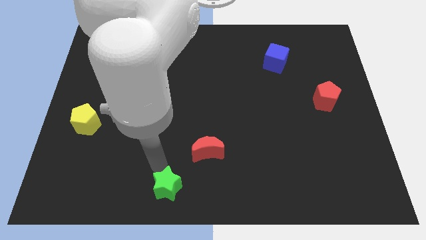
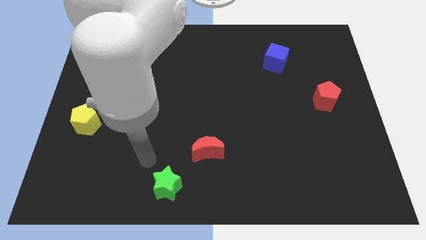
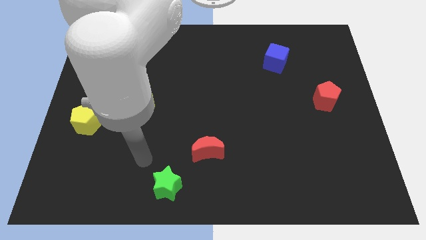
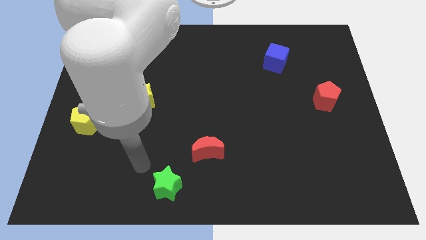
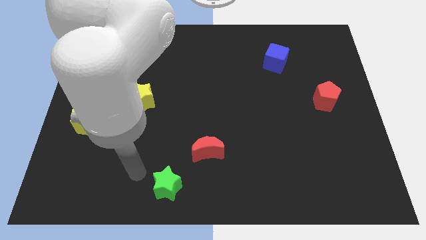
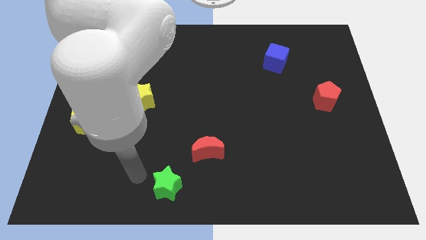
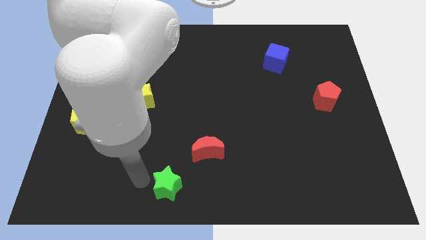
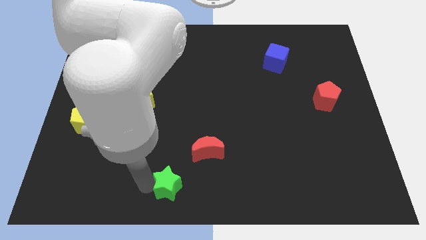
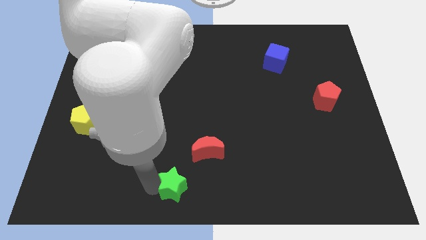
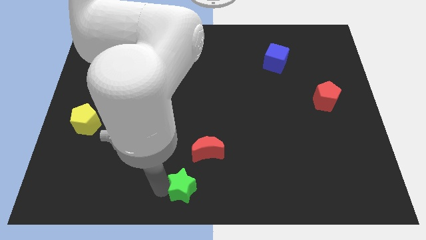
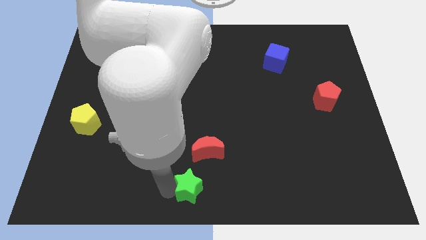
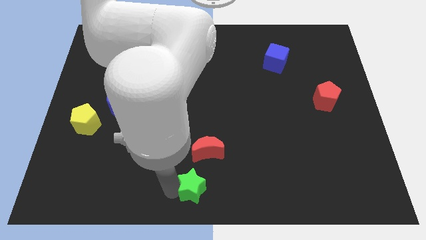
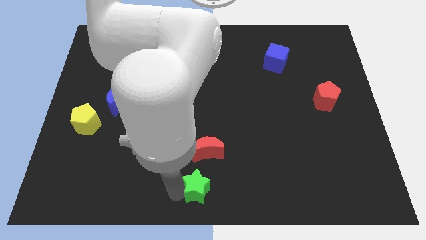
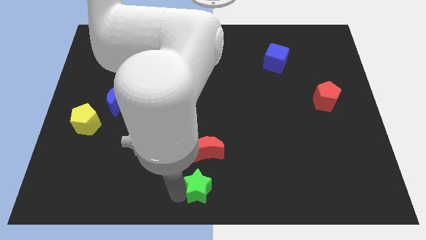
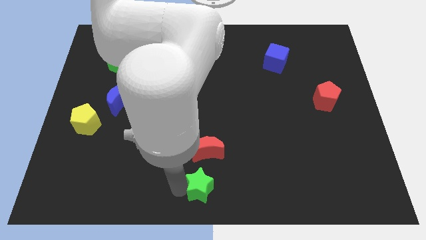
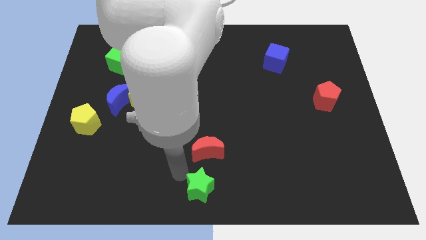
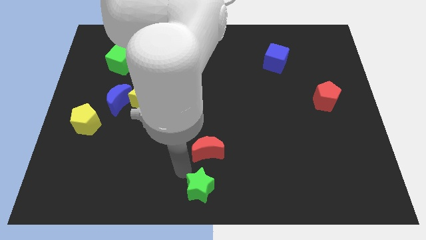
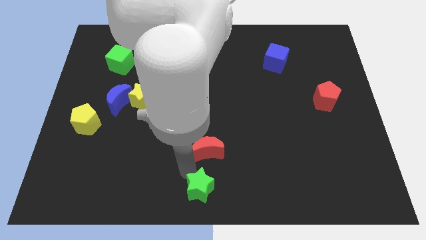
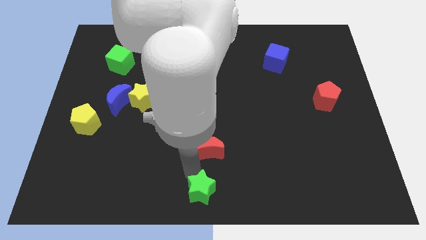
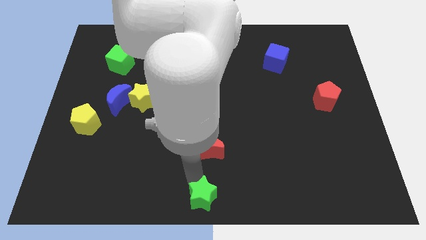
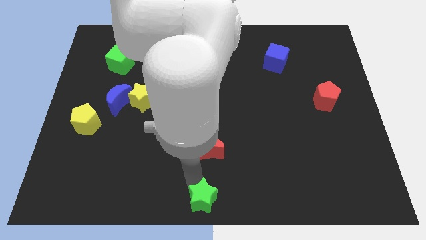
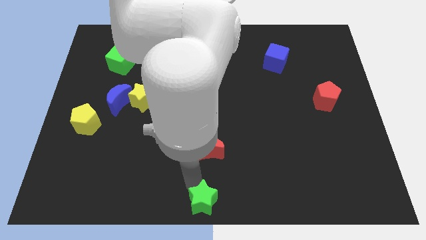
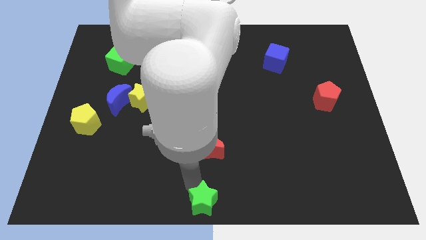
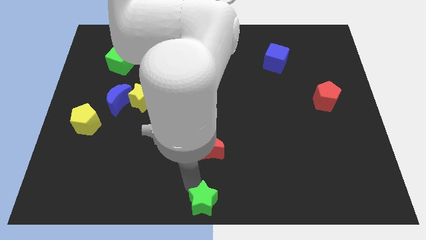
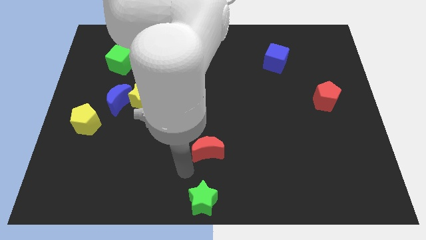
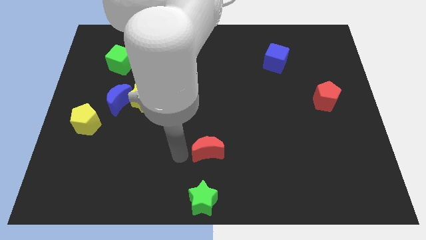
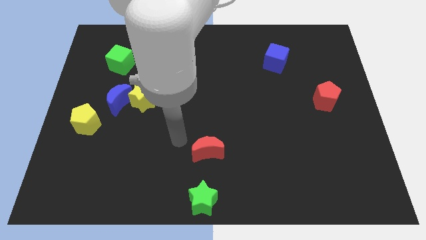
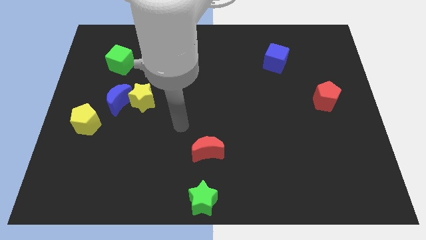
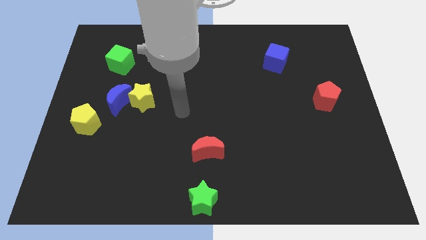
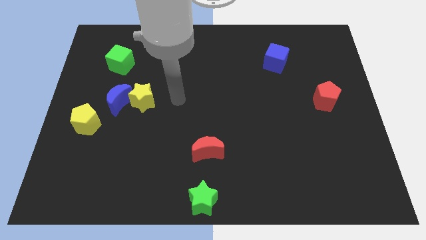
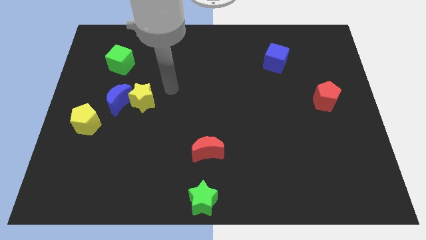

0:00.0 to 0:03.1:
place the green star below the red moon

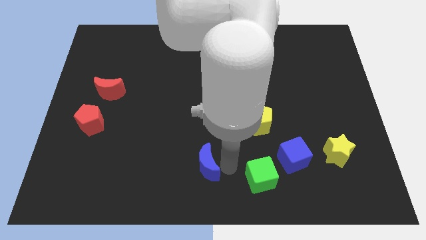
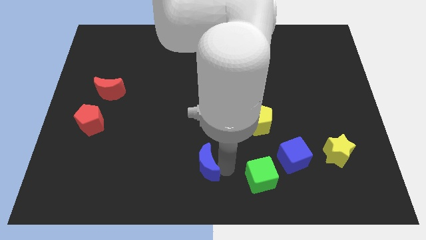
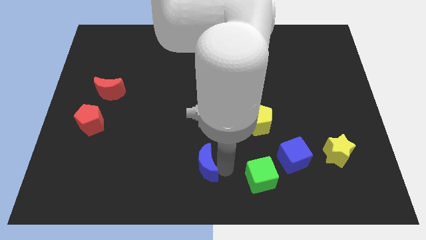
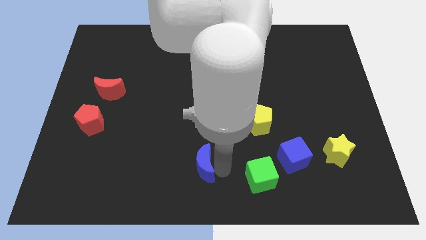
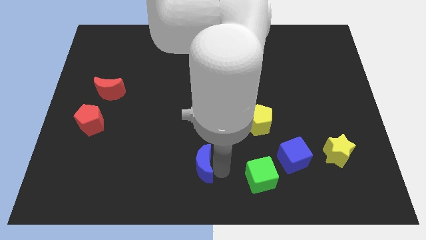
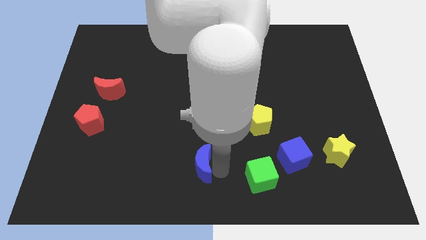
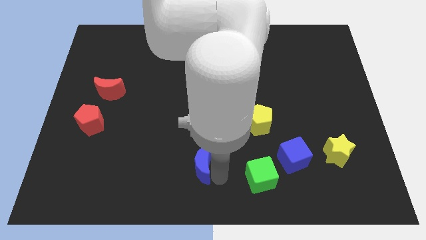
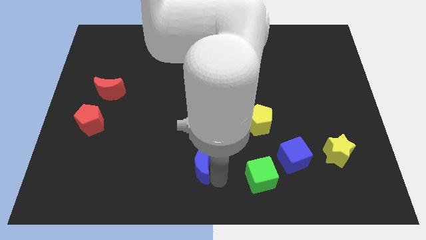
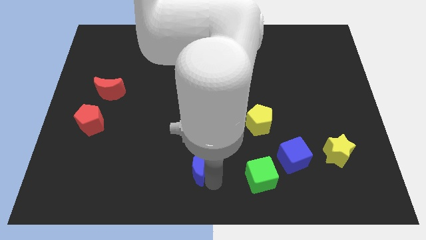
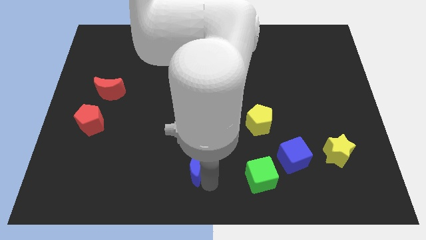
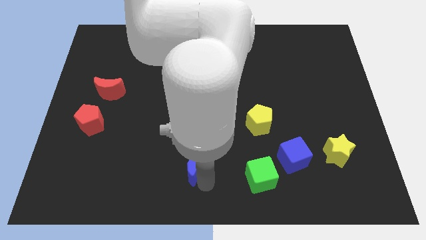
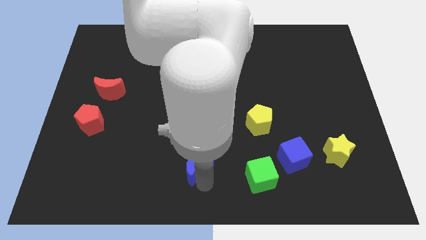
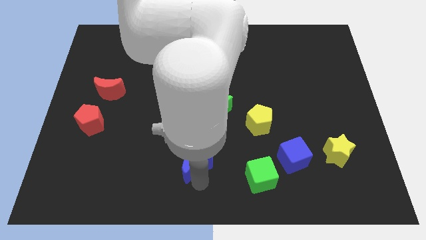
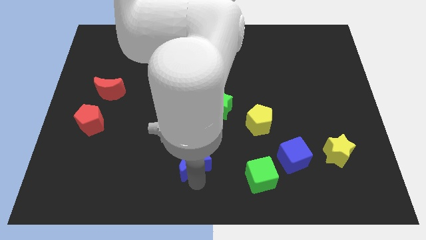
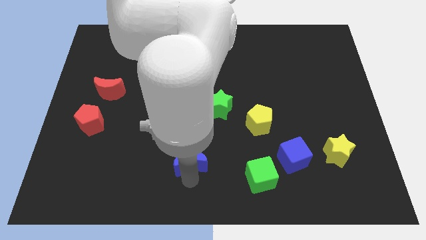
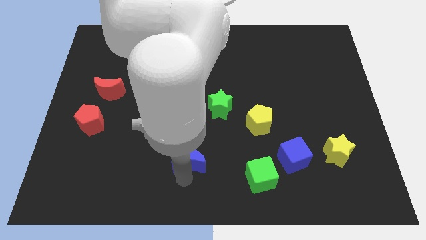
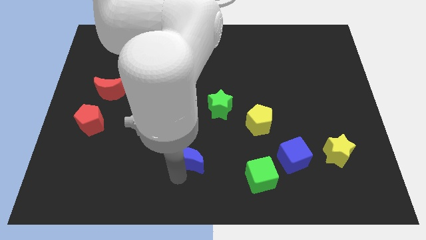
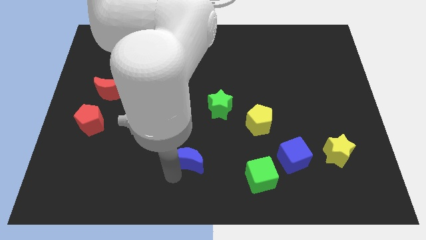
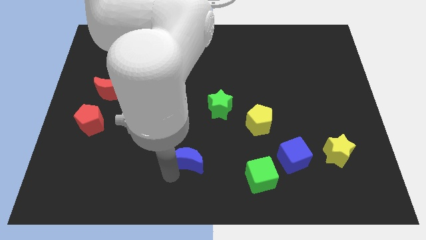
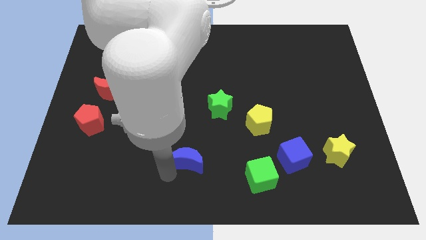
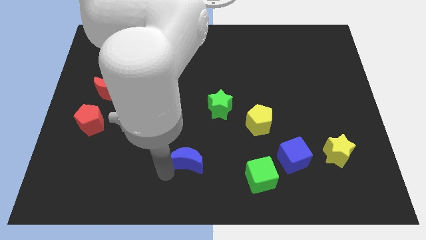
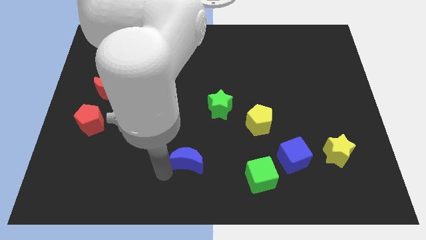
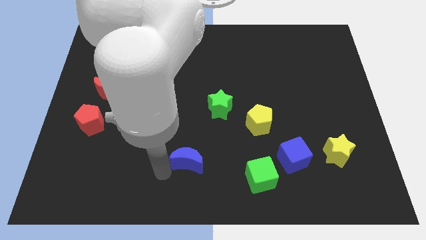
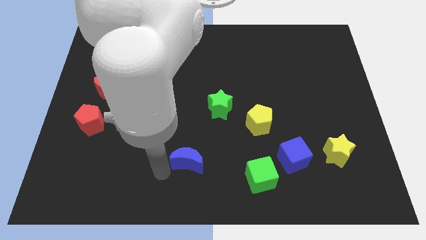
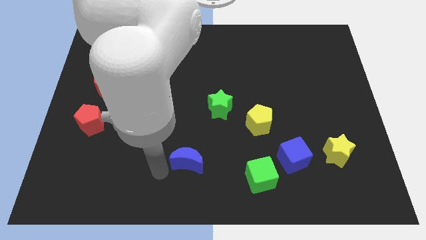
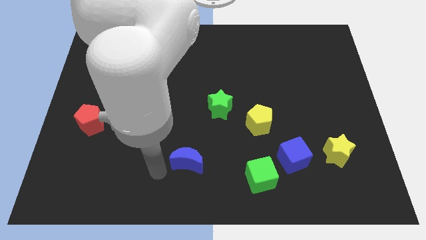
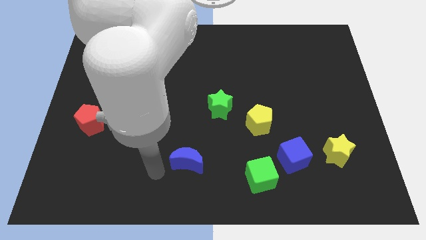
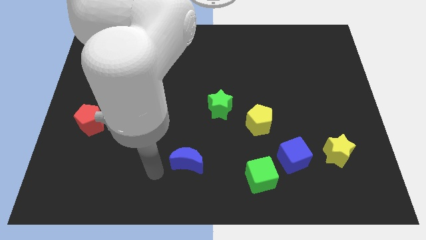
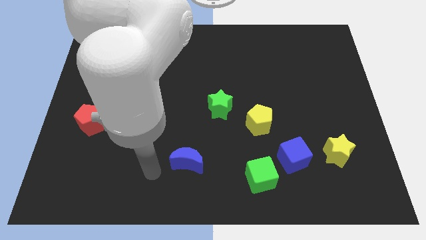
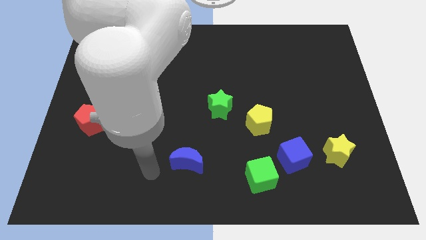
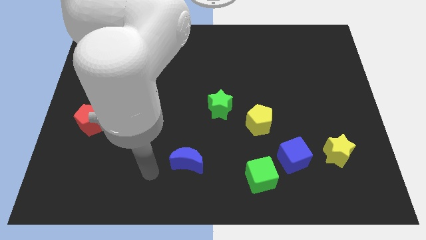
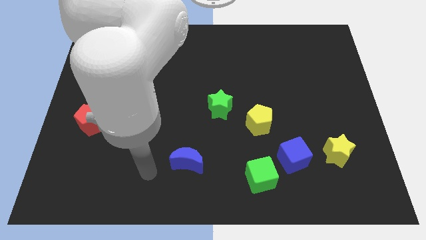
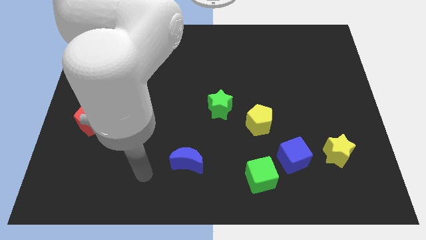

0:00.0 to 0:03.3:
move the blue moon slightly away from the green cube

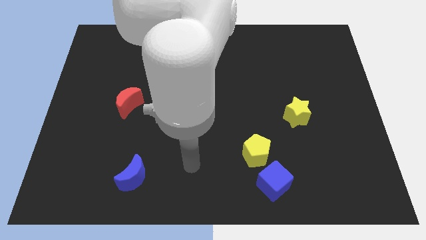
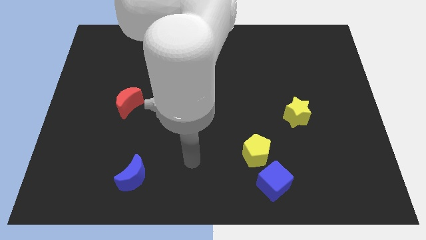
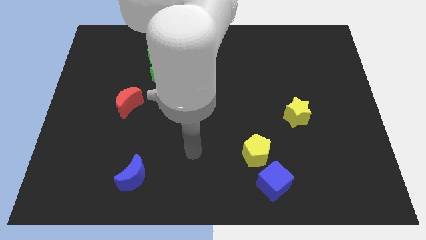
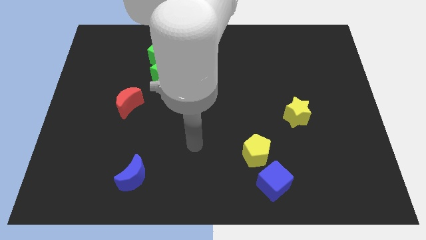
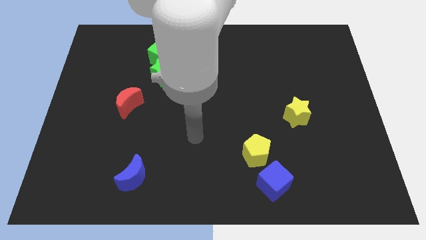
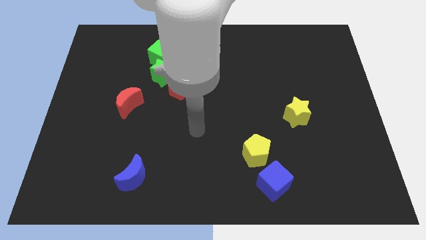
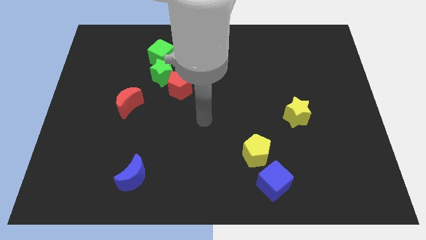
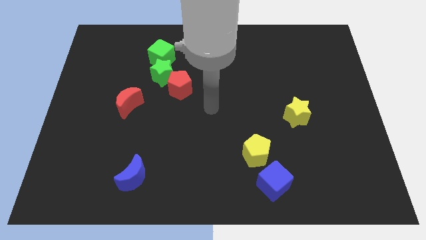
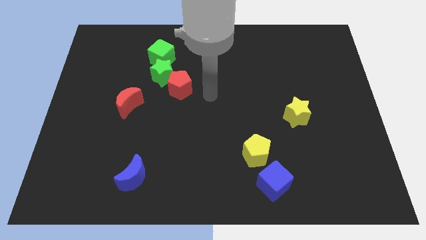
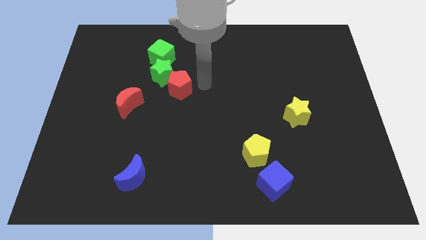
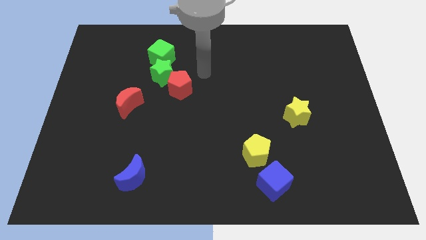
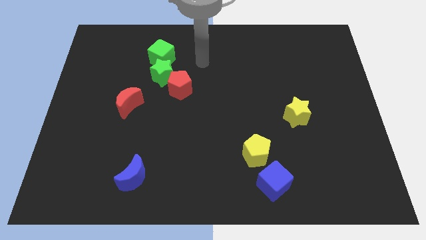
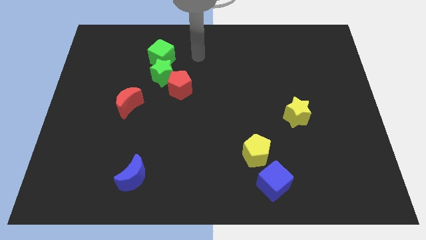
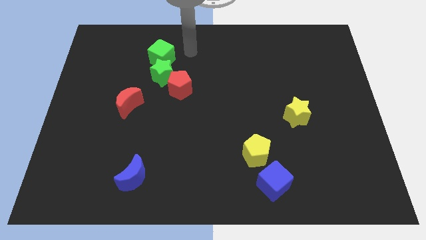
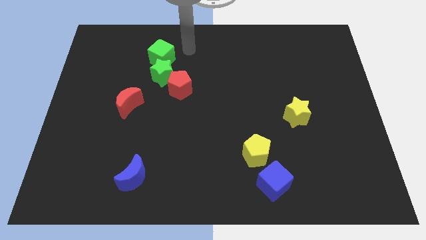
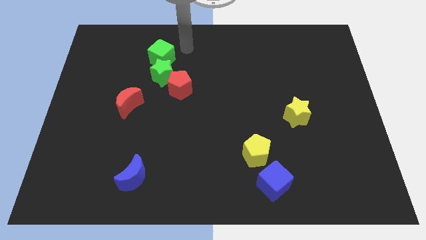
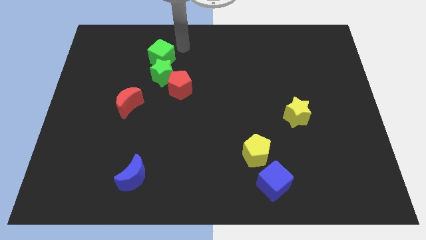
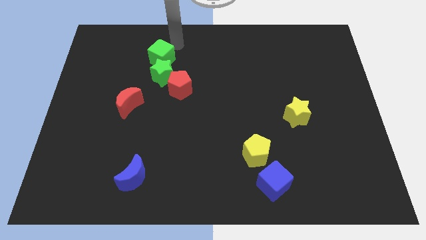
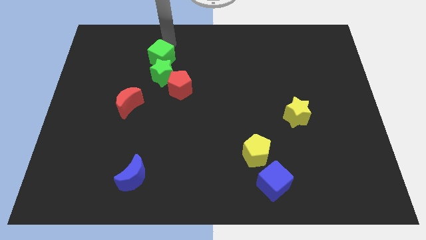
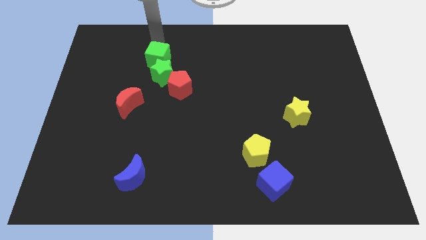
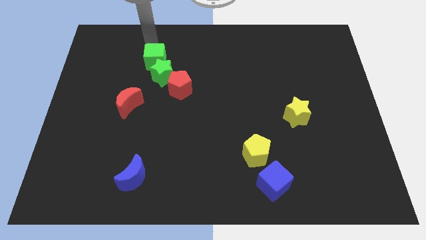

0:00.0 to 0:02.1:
place your arm above the green cube

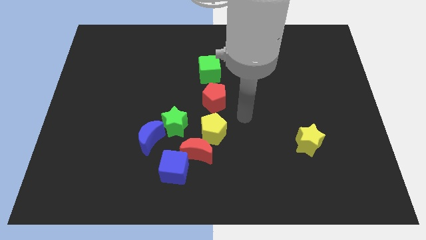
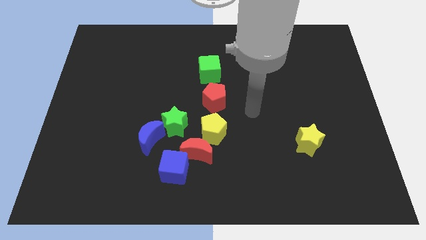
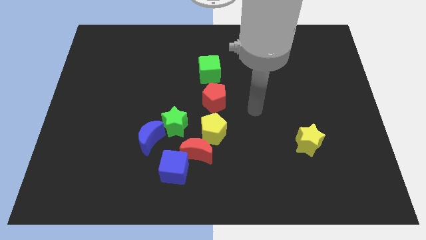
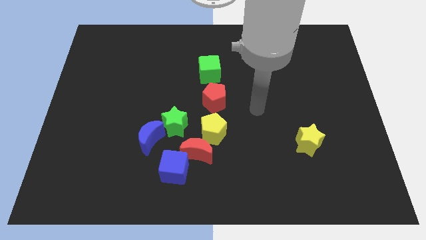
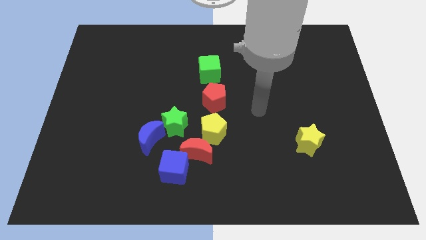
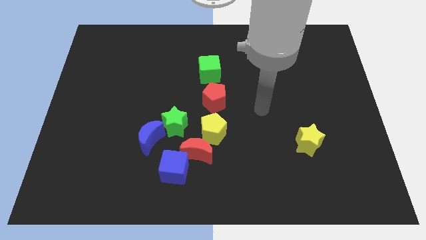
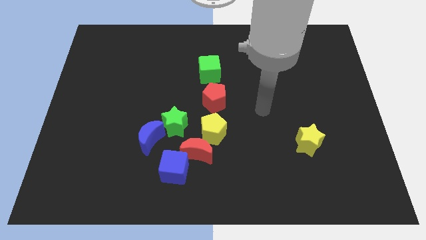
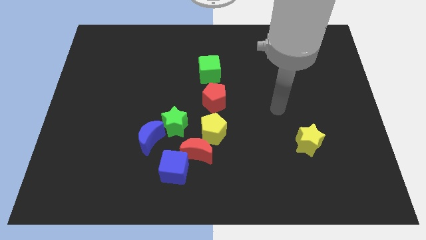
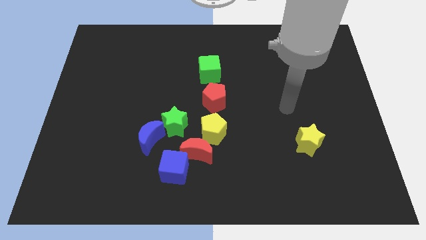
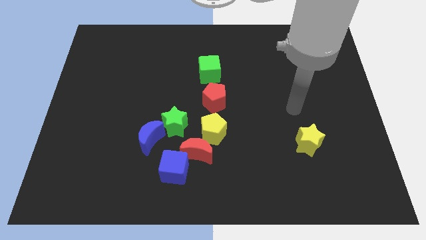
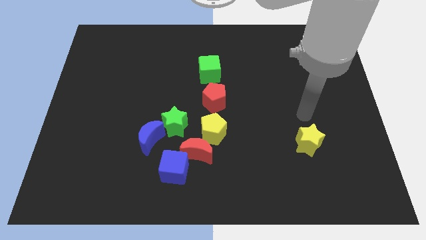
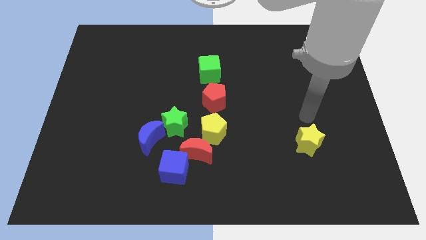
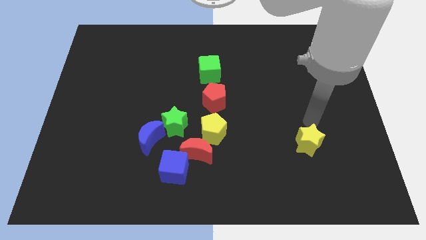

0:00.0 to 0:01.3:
move your arm to the top of the yellow star
